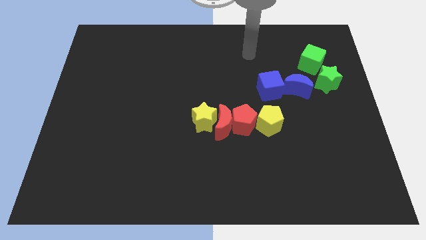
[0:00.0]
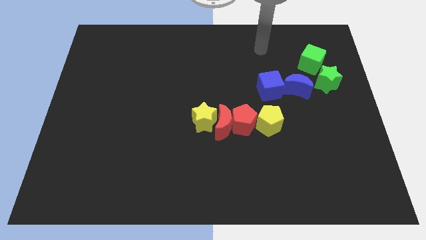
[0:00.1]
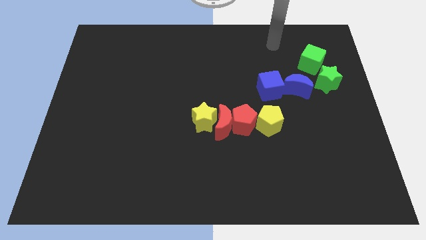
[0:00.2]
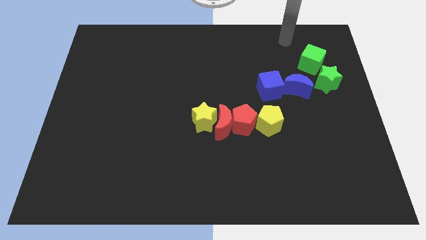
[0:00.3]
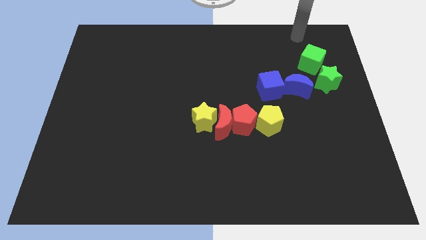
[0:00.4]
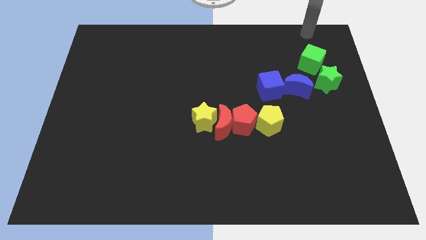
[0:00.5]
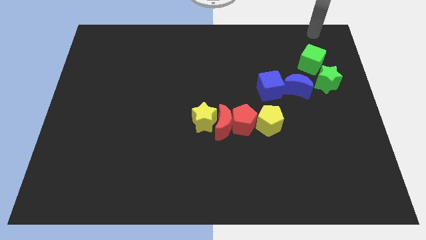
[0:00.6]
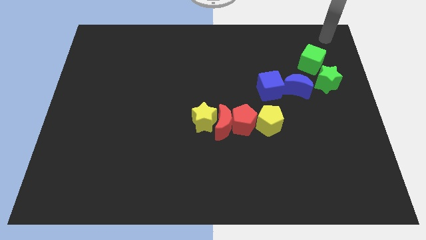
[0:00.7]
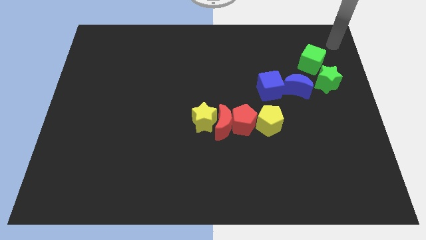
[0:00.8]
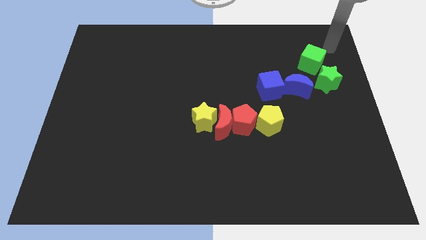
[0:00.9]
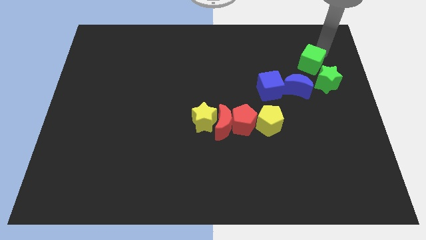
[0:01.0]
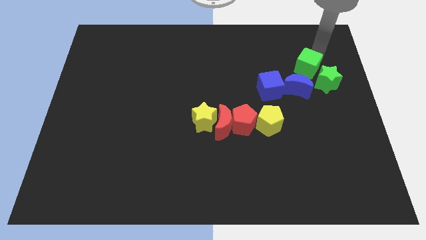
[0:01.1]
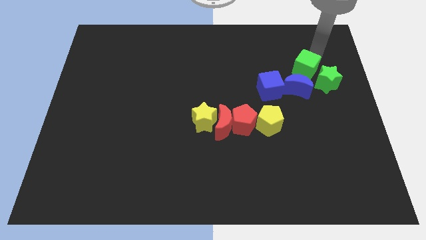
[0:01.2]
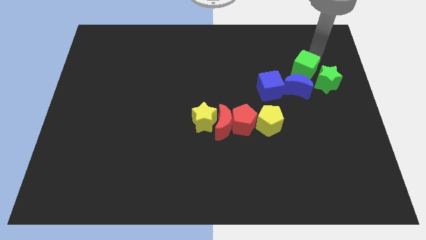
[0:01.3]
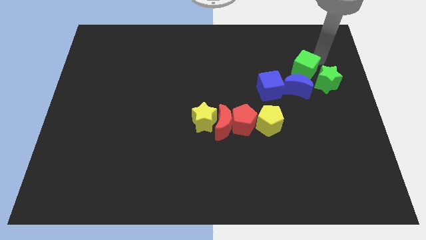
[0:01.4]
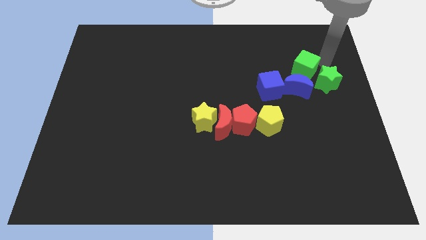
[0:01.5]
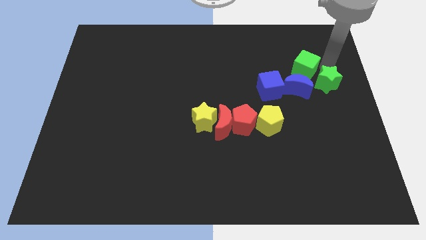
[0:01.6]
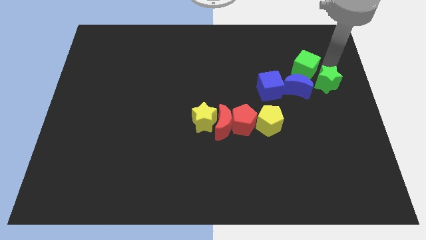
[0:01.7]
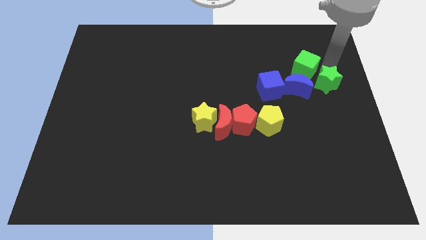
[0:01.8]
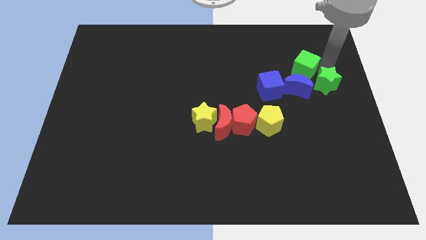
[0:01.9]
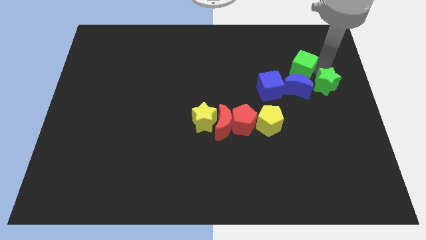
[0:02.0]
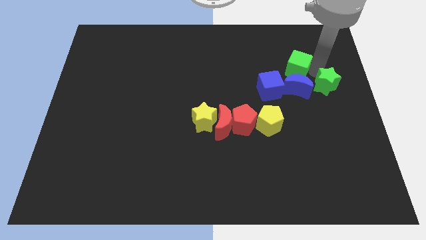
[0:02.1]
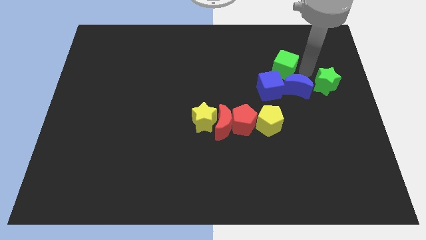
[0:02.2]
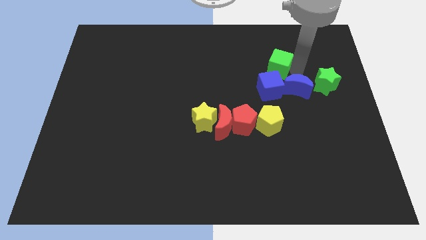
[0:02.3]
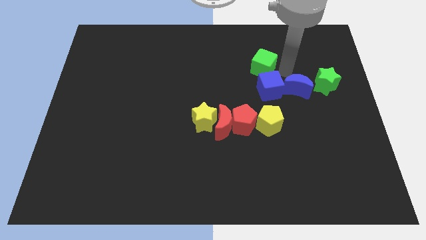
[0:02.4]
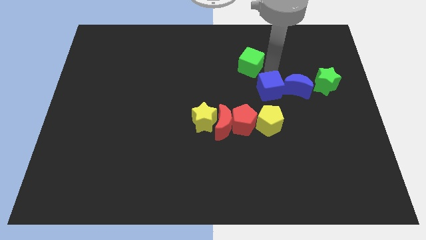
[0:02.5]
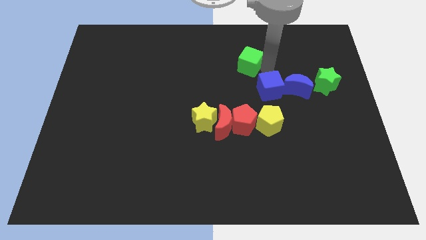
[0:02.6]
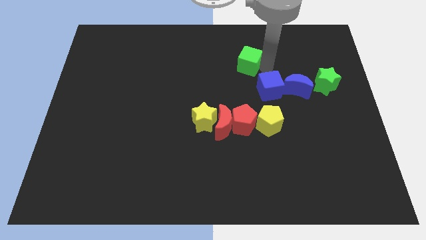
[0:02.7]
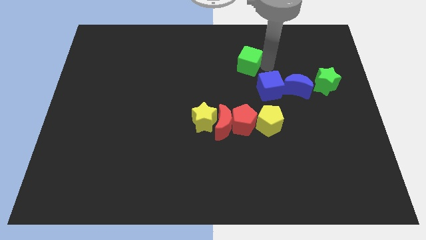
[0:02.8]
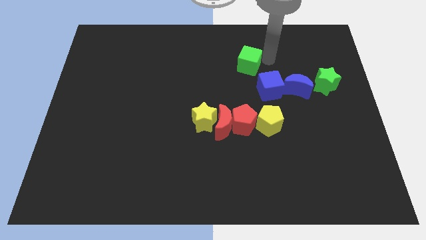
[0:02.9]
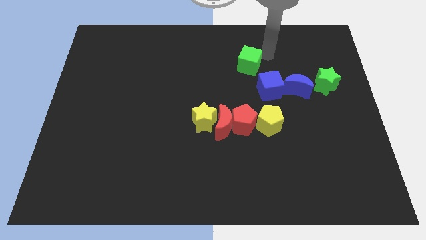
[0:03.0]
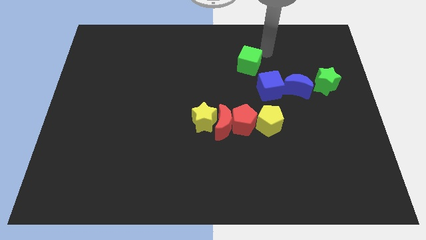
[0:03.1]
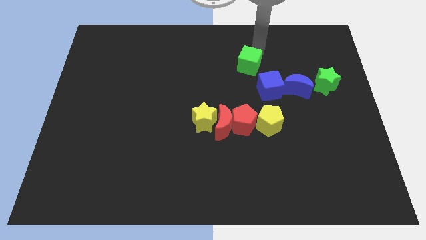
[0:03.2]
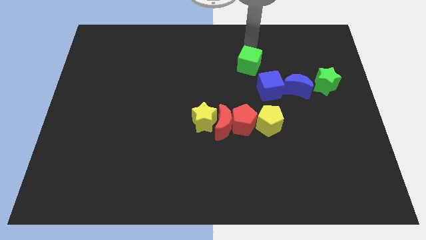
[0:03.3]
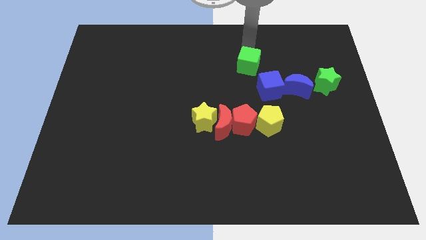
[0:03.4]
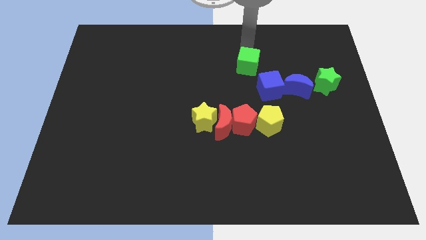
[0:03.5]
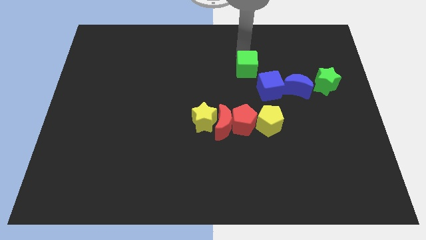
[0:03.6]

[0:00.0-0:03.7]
move the green cube vertically to the top side of the red pentagon

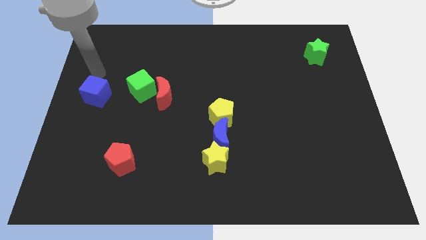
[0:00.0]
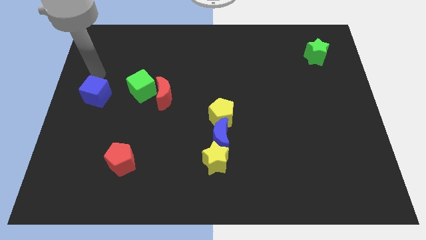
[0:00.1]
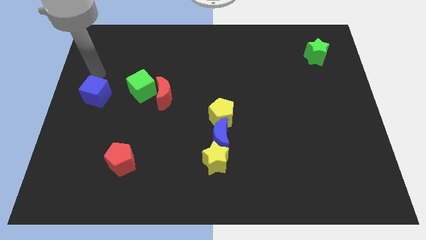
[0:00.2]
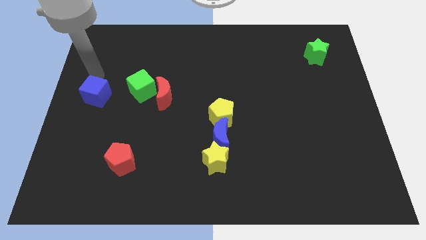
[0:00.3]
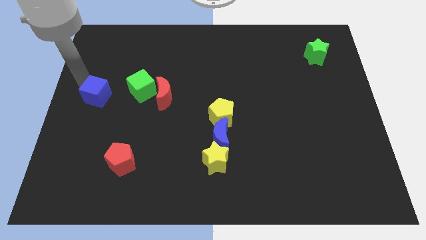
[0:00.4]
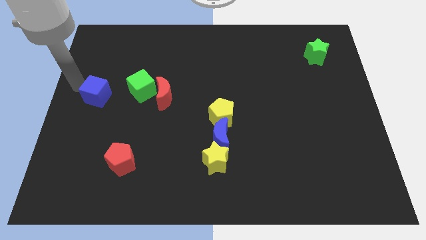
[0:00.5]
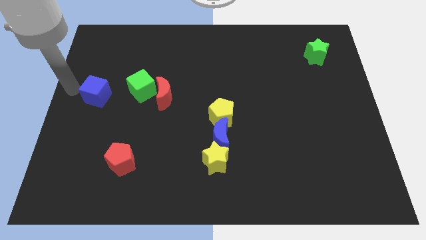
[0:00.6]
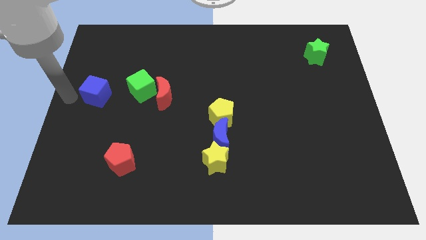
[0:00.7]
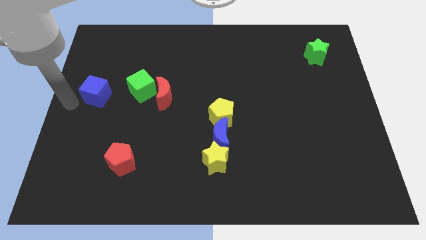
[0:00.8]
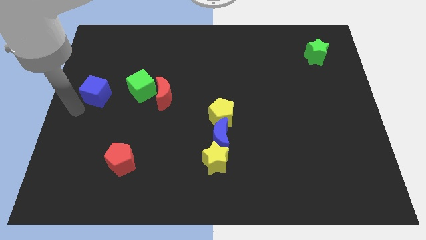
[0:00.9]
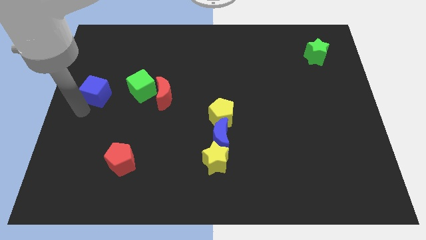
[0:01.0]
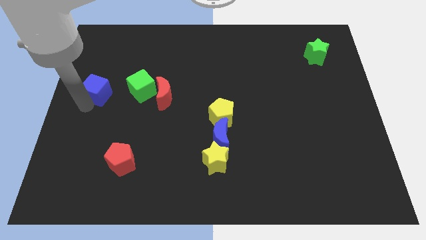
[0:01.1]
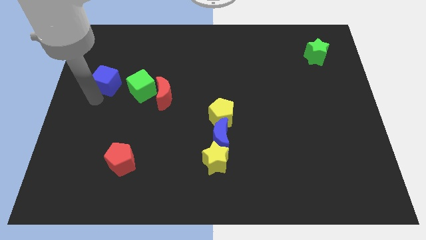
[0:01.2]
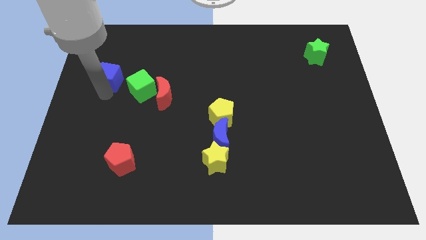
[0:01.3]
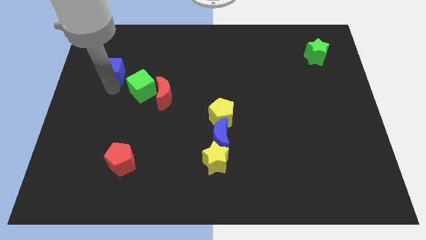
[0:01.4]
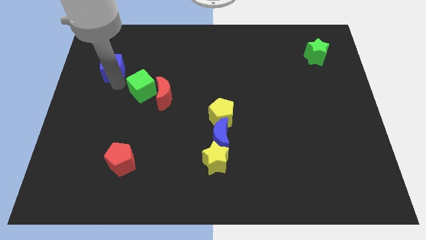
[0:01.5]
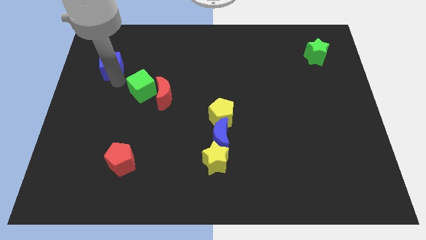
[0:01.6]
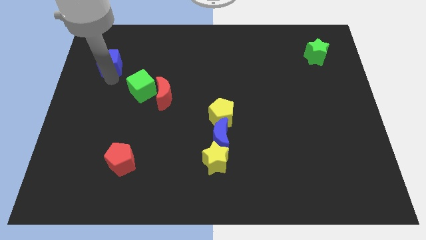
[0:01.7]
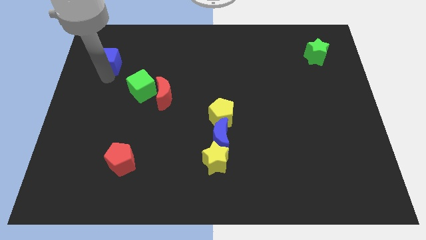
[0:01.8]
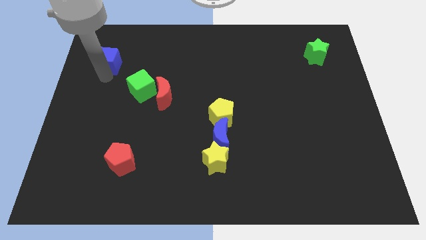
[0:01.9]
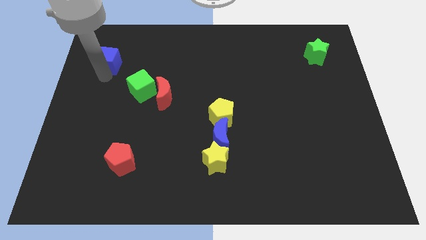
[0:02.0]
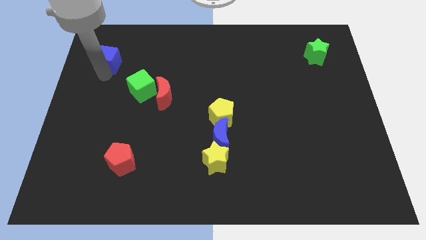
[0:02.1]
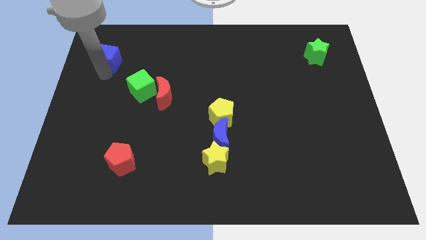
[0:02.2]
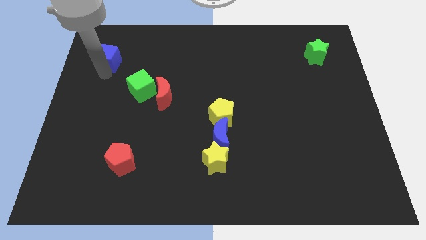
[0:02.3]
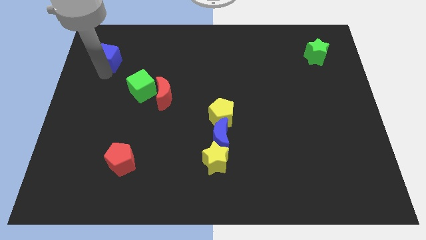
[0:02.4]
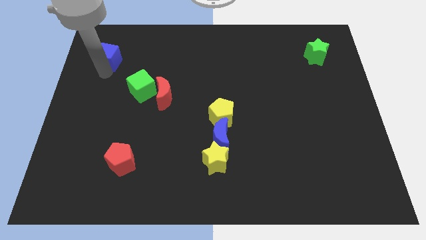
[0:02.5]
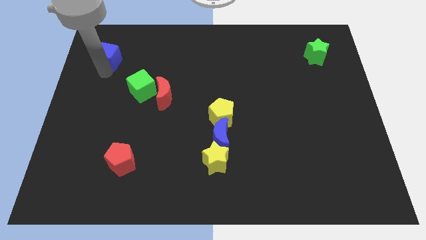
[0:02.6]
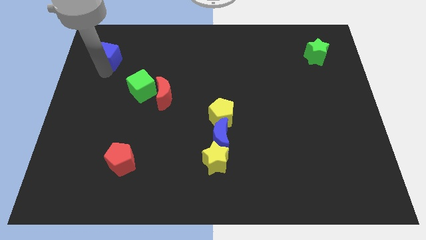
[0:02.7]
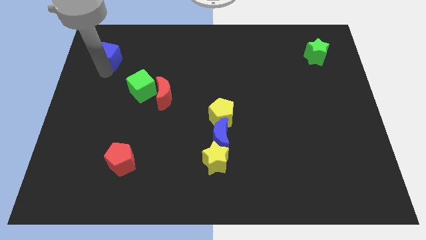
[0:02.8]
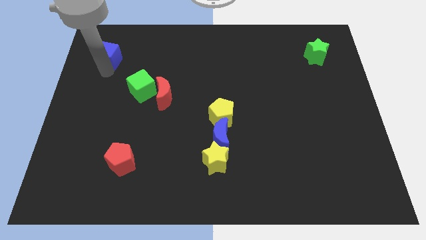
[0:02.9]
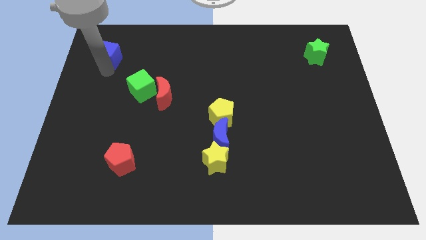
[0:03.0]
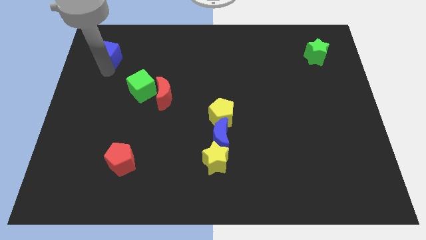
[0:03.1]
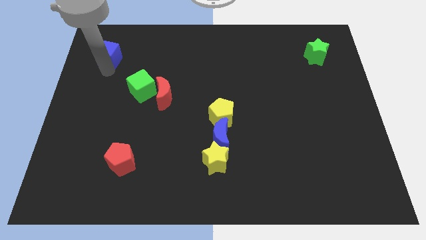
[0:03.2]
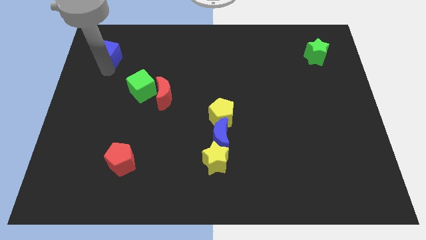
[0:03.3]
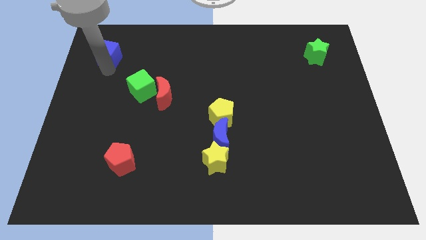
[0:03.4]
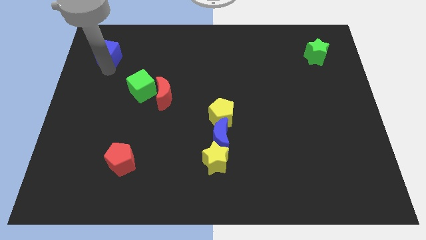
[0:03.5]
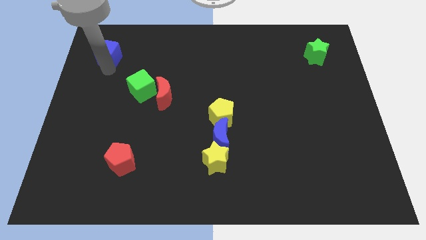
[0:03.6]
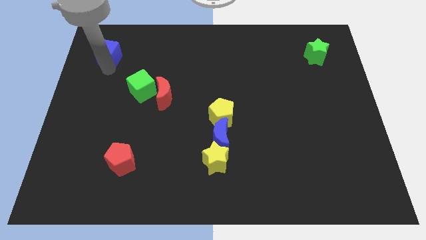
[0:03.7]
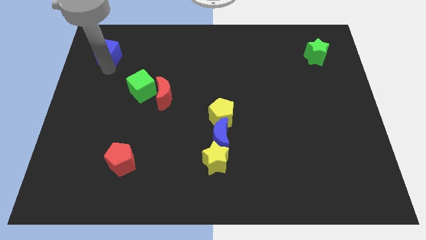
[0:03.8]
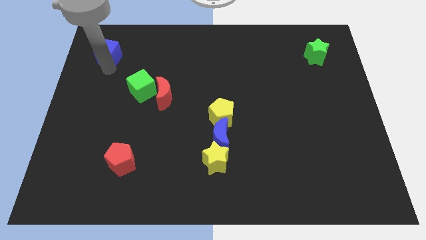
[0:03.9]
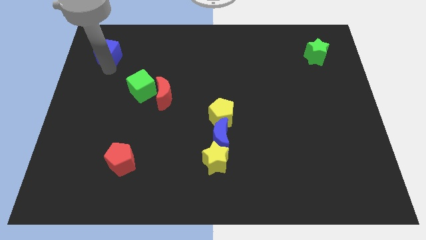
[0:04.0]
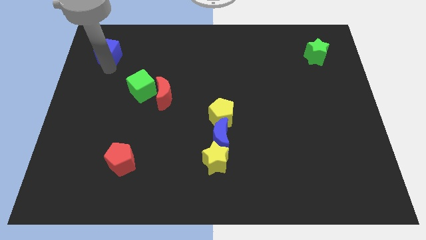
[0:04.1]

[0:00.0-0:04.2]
push the blue cube to the top left diagonal side of the green cube

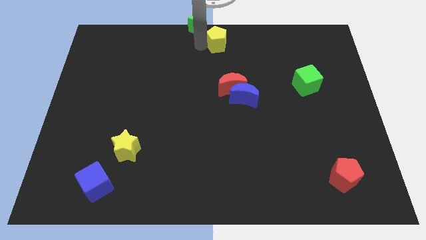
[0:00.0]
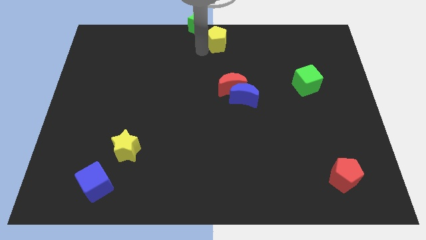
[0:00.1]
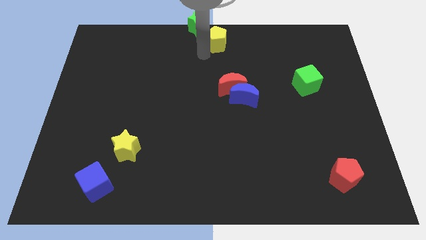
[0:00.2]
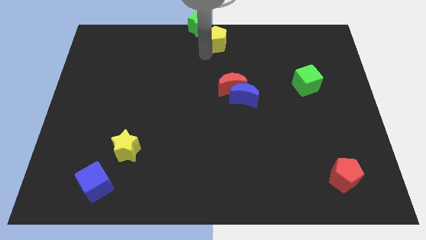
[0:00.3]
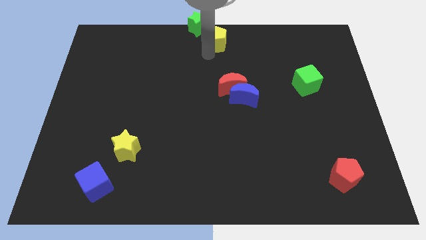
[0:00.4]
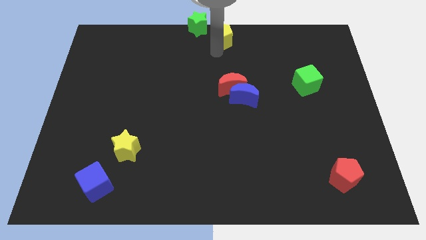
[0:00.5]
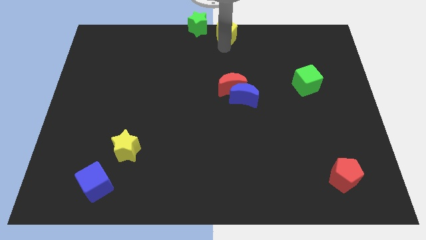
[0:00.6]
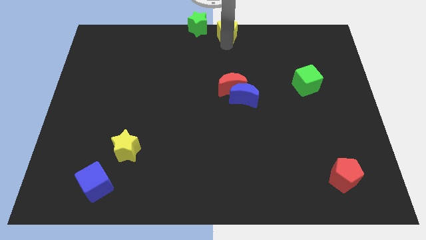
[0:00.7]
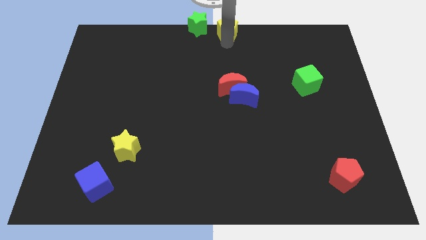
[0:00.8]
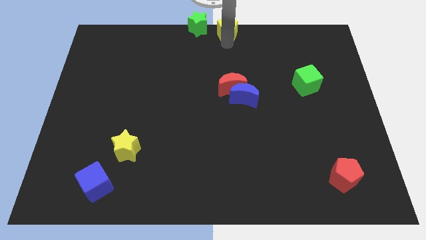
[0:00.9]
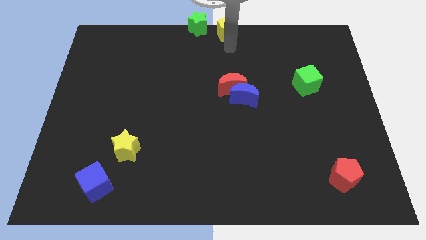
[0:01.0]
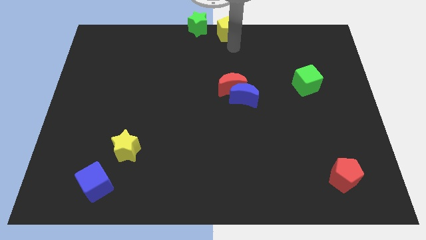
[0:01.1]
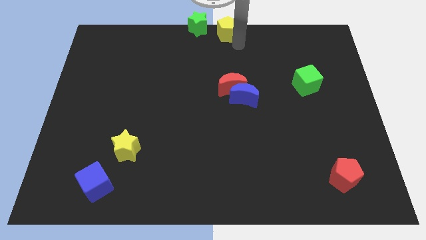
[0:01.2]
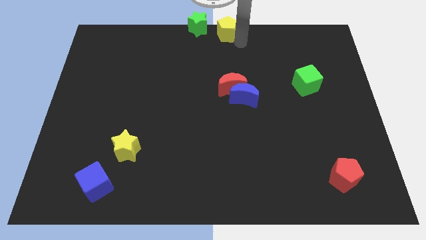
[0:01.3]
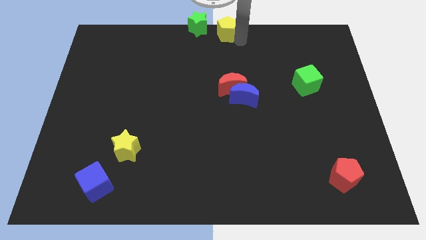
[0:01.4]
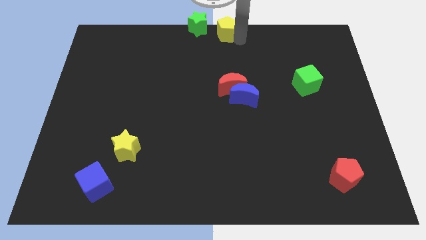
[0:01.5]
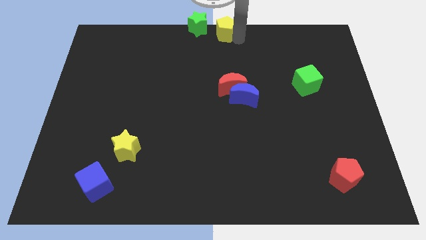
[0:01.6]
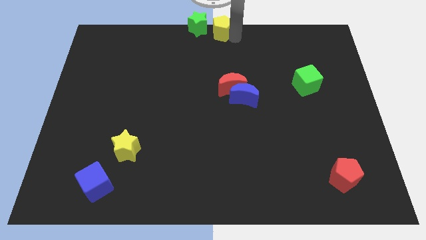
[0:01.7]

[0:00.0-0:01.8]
place the yellow pentagon to the right side of the green star
